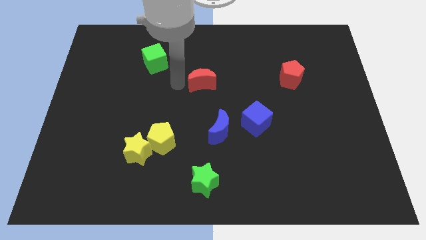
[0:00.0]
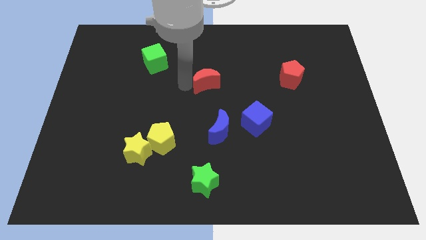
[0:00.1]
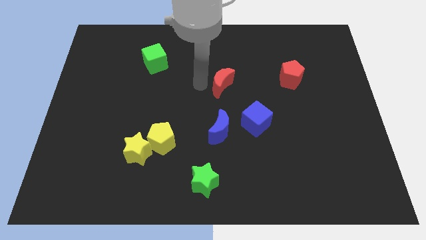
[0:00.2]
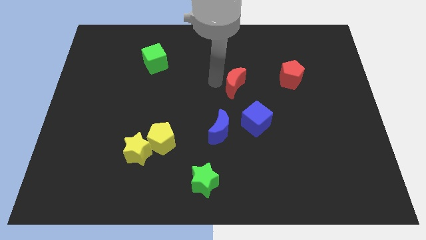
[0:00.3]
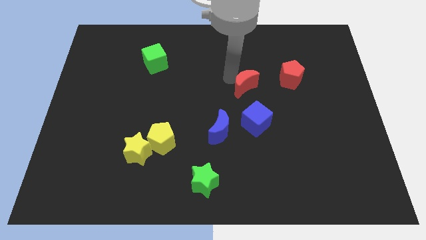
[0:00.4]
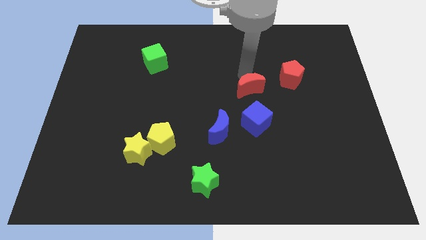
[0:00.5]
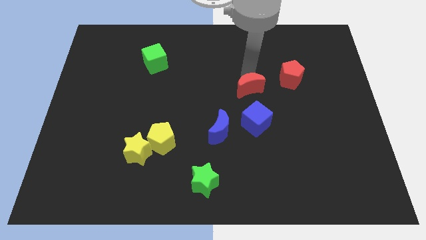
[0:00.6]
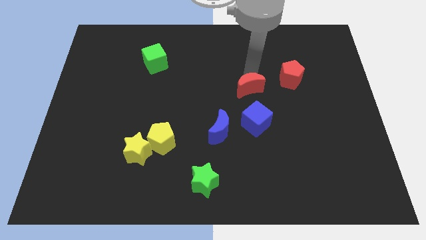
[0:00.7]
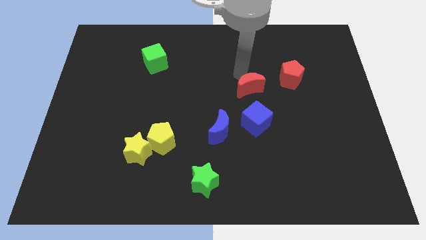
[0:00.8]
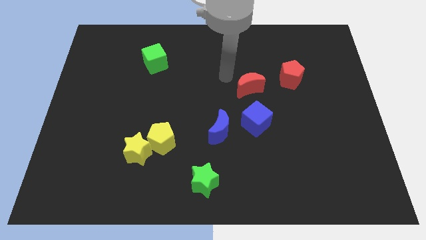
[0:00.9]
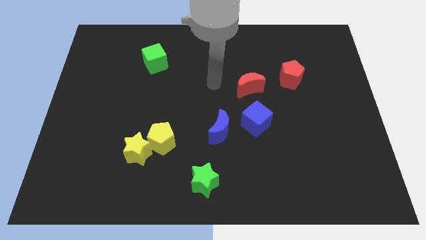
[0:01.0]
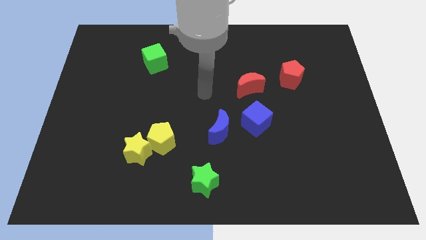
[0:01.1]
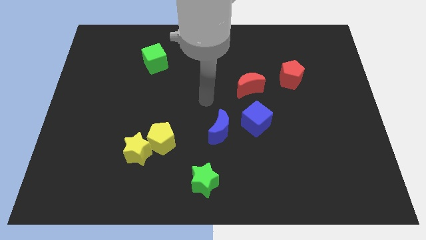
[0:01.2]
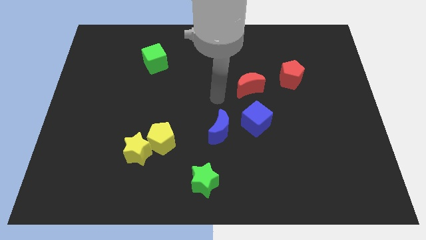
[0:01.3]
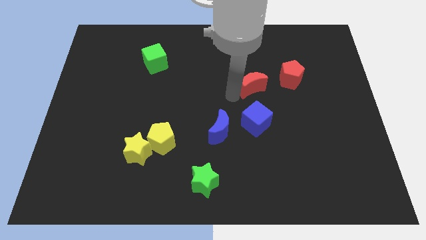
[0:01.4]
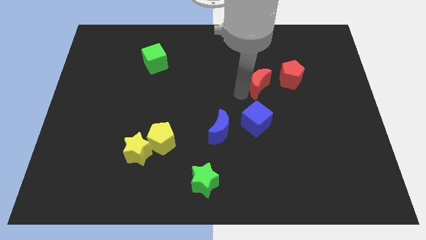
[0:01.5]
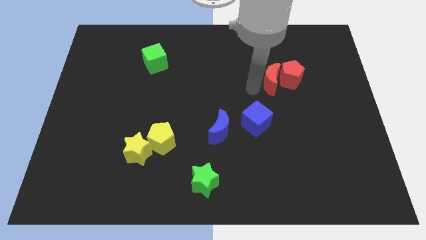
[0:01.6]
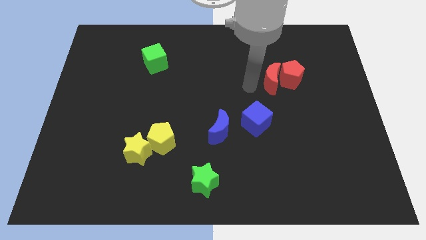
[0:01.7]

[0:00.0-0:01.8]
move the red crescent close to the red pentagon

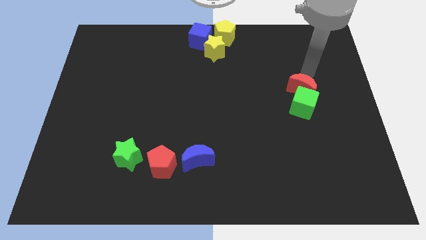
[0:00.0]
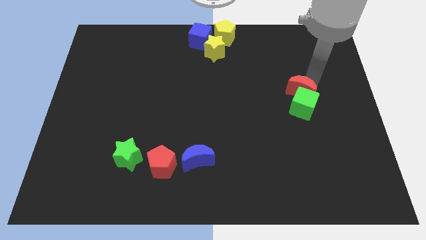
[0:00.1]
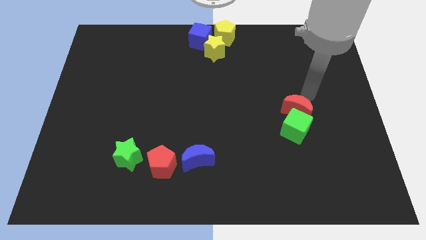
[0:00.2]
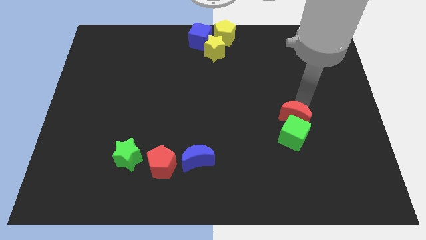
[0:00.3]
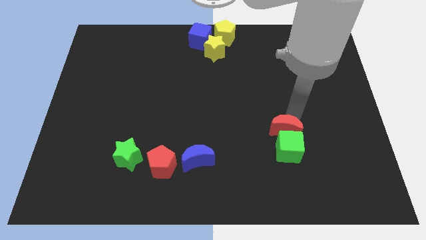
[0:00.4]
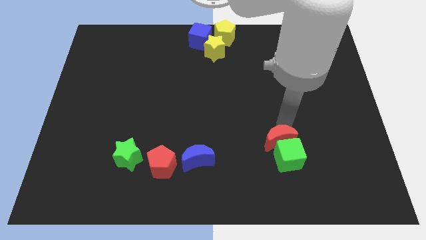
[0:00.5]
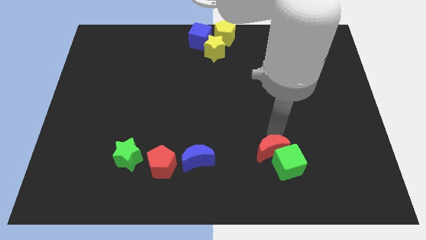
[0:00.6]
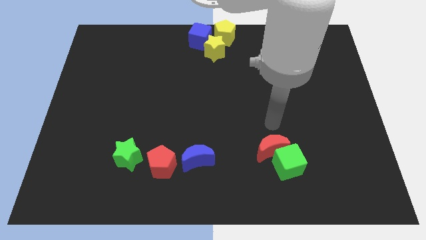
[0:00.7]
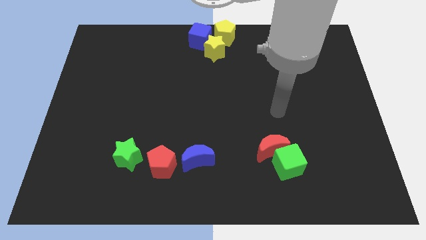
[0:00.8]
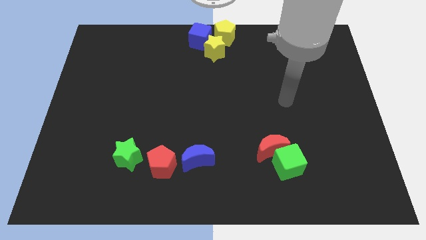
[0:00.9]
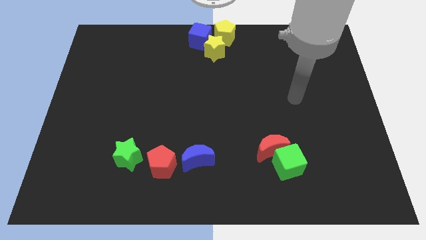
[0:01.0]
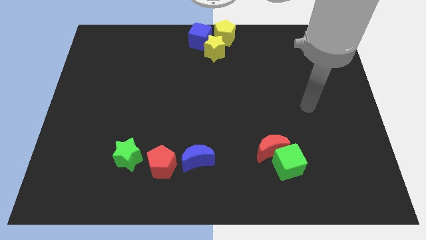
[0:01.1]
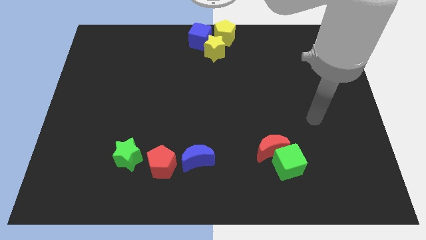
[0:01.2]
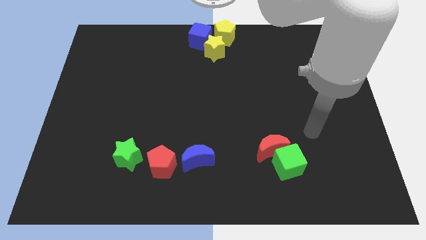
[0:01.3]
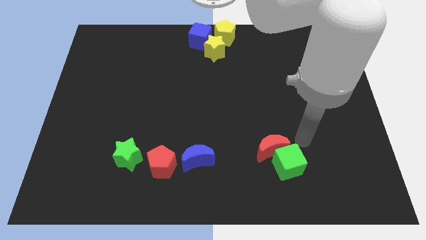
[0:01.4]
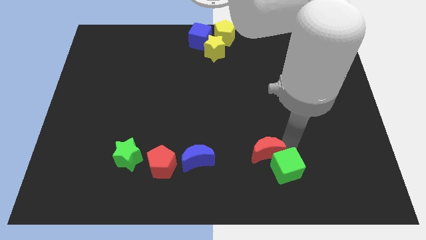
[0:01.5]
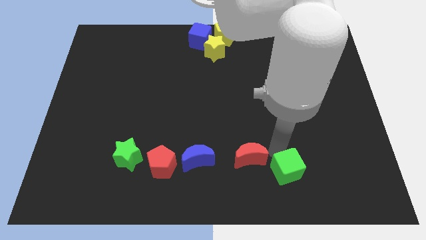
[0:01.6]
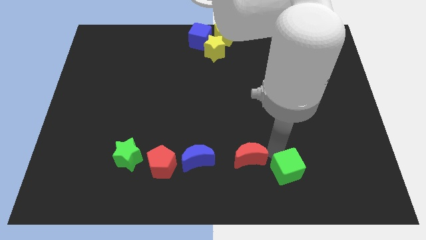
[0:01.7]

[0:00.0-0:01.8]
push the red crescent and green cube towards the bottom side of the board

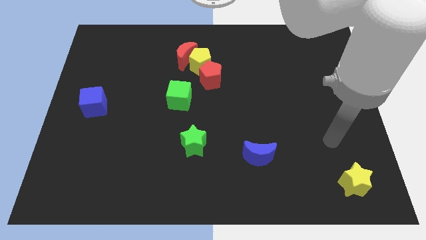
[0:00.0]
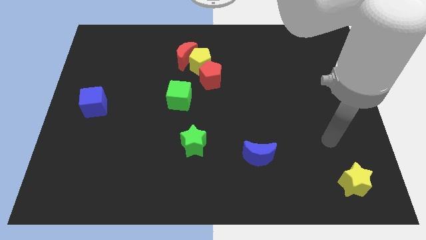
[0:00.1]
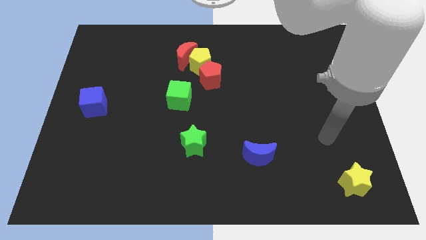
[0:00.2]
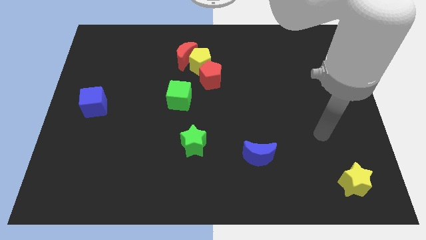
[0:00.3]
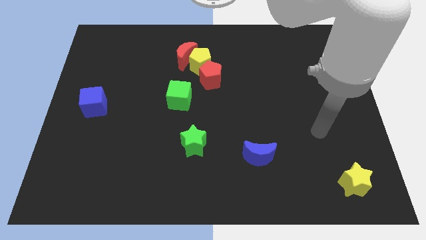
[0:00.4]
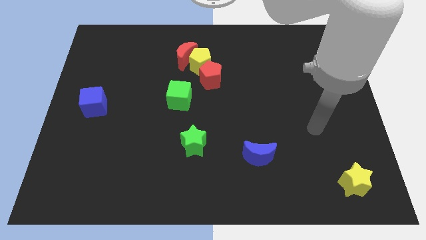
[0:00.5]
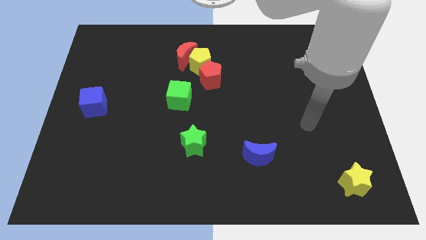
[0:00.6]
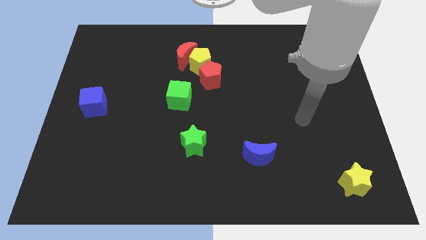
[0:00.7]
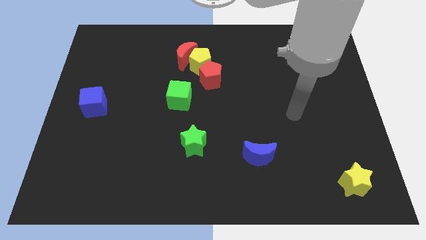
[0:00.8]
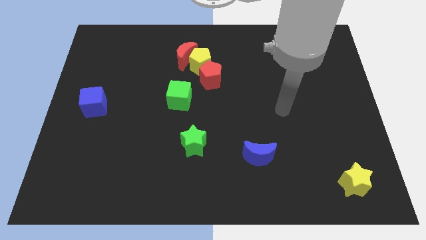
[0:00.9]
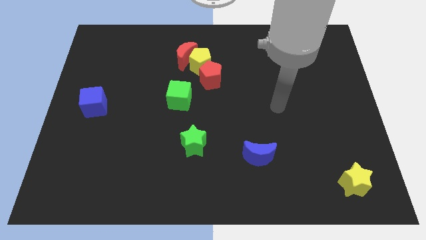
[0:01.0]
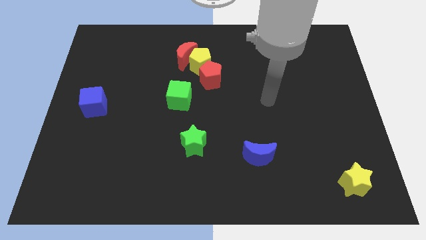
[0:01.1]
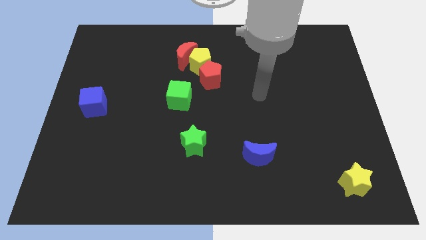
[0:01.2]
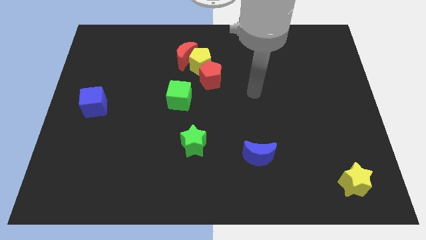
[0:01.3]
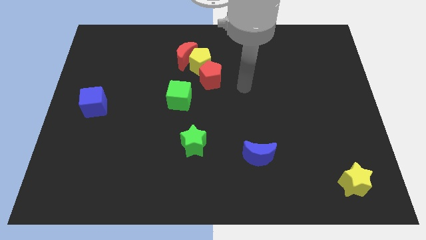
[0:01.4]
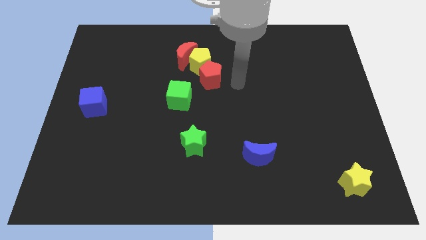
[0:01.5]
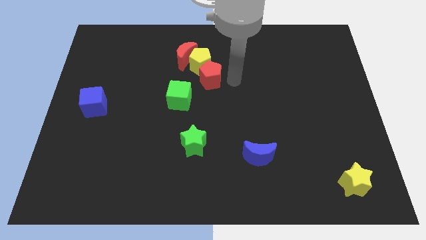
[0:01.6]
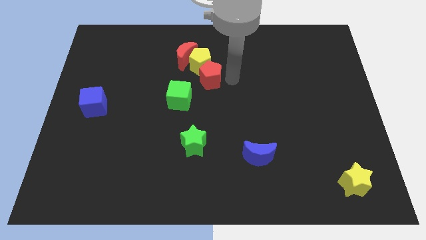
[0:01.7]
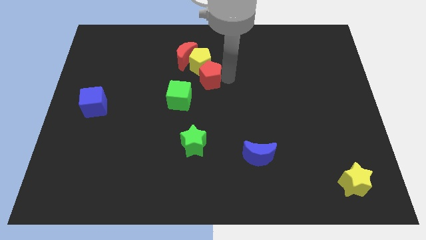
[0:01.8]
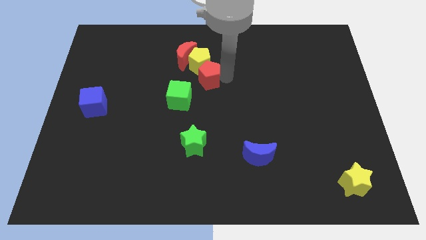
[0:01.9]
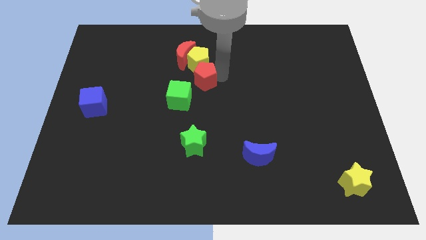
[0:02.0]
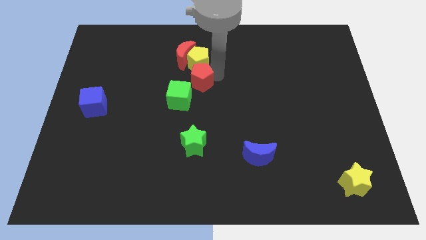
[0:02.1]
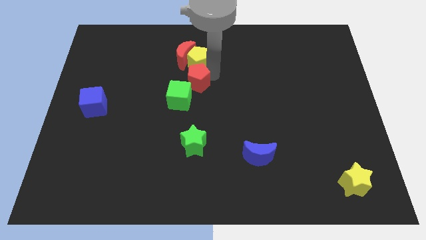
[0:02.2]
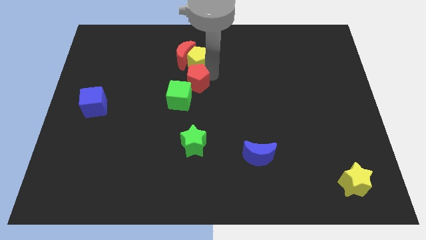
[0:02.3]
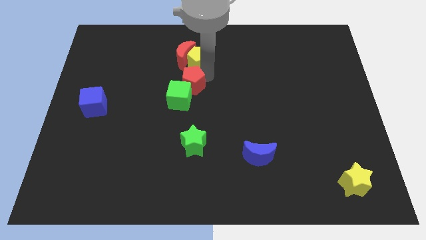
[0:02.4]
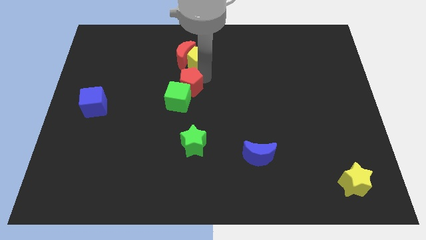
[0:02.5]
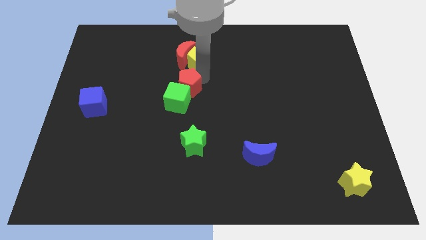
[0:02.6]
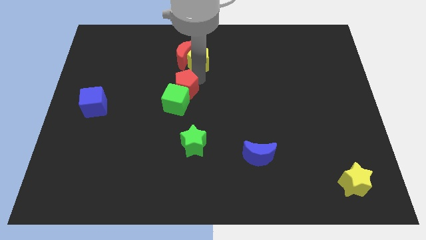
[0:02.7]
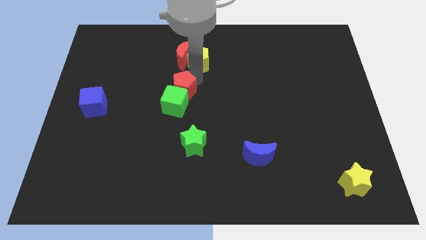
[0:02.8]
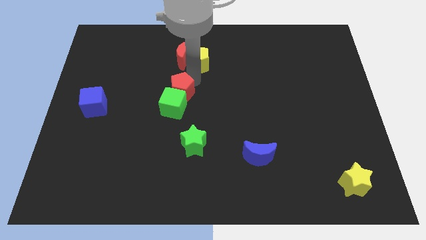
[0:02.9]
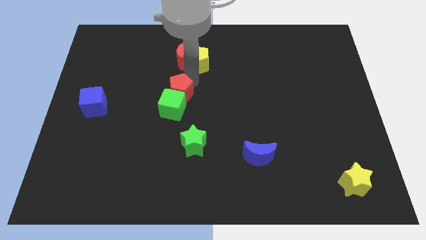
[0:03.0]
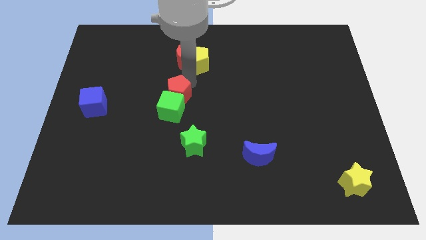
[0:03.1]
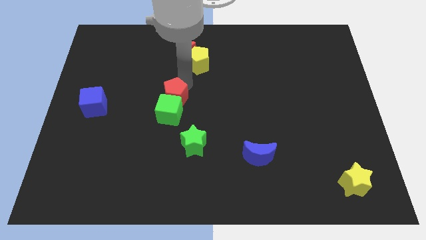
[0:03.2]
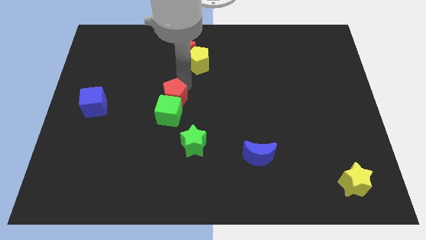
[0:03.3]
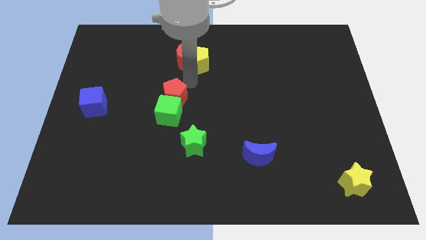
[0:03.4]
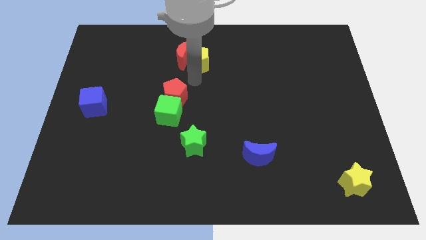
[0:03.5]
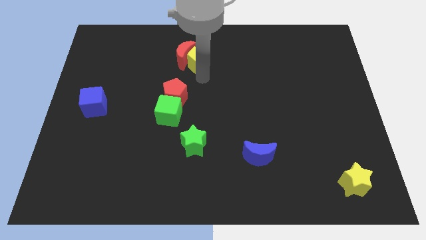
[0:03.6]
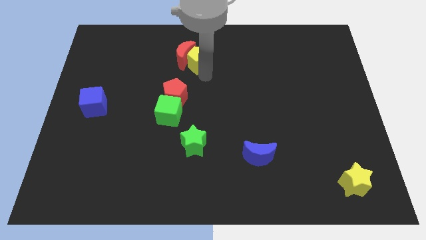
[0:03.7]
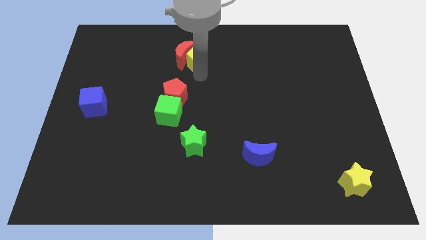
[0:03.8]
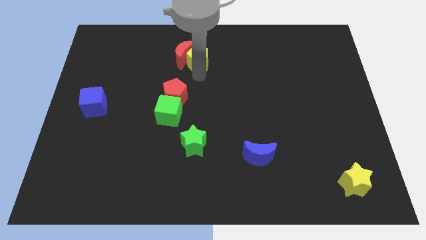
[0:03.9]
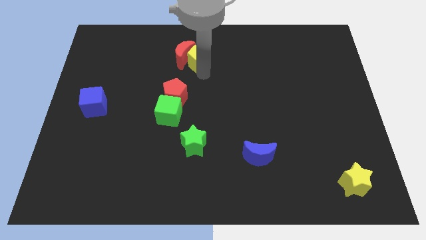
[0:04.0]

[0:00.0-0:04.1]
push red pentagon along with green cube left center

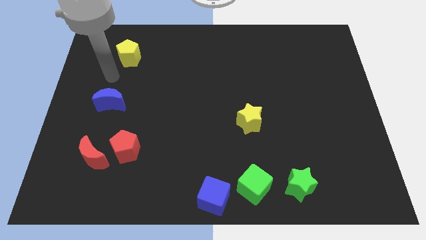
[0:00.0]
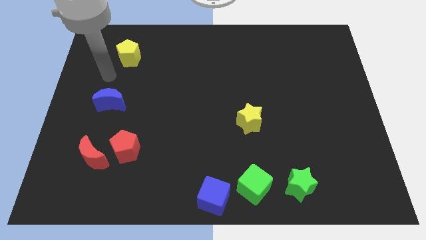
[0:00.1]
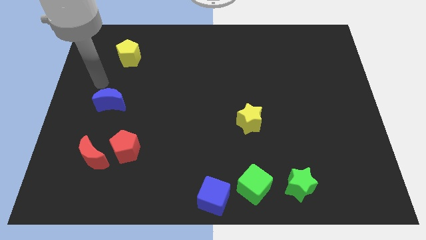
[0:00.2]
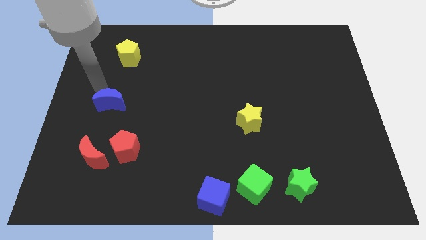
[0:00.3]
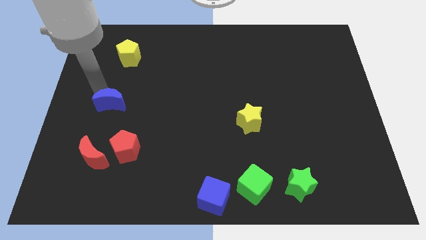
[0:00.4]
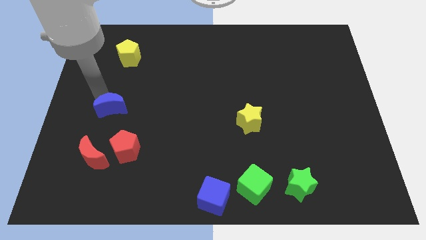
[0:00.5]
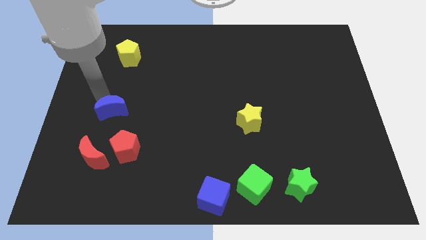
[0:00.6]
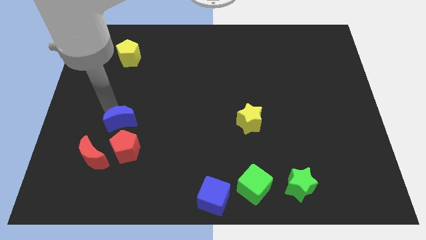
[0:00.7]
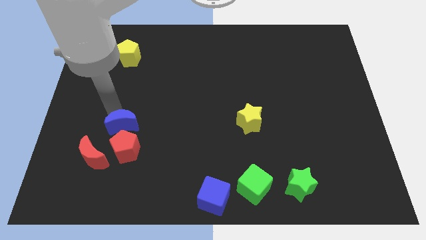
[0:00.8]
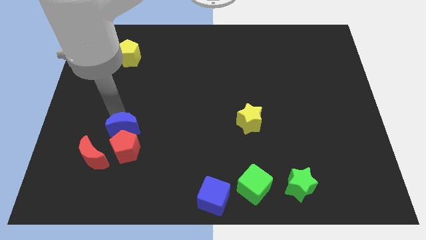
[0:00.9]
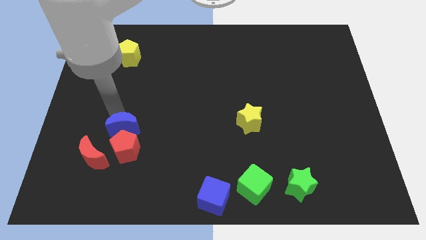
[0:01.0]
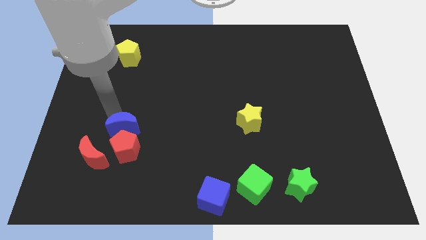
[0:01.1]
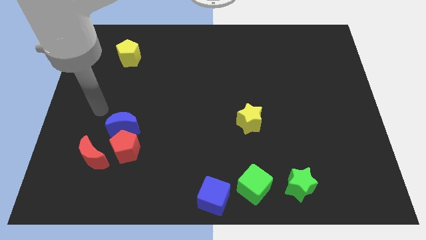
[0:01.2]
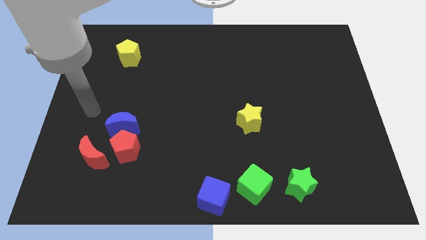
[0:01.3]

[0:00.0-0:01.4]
slide the blue crescent close to the red pentagon
